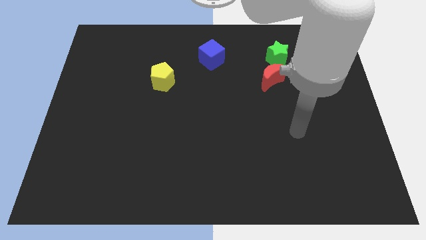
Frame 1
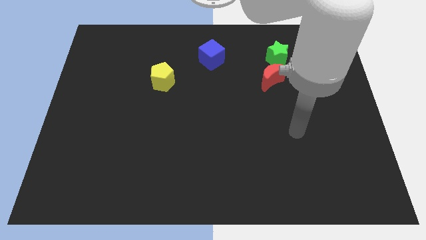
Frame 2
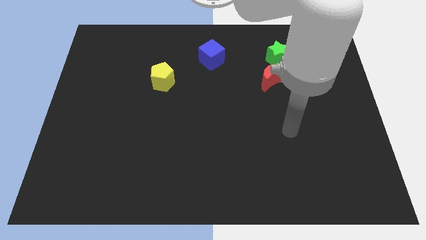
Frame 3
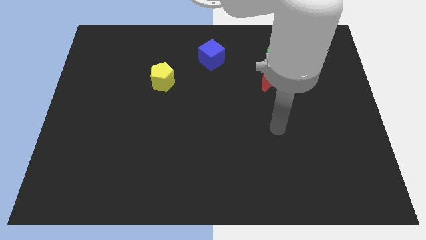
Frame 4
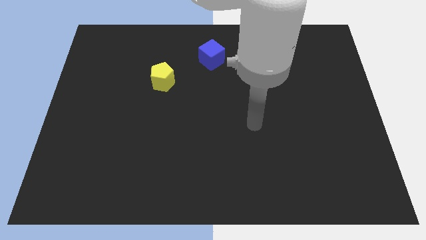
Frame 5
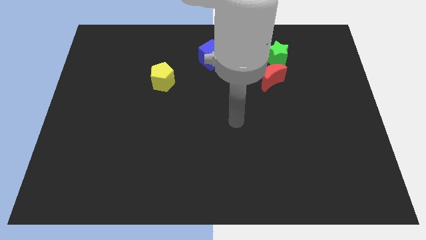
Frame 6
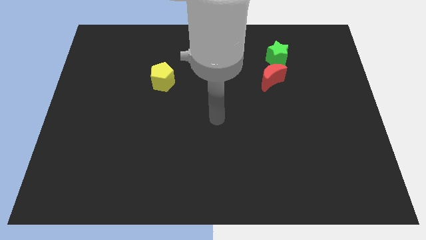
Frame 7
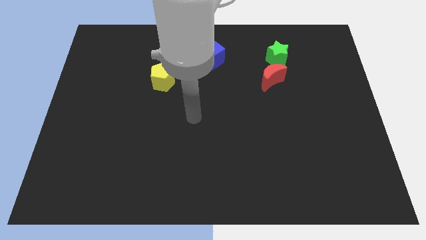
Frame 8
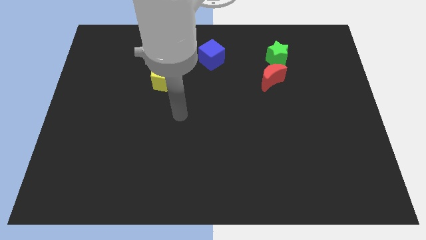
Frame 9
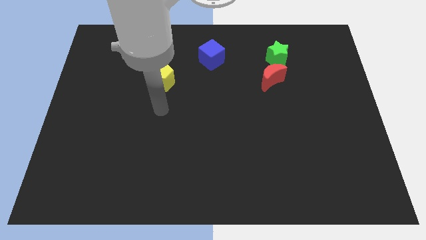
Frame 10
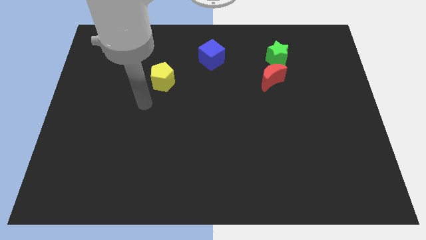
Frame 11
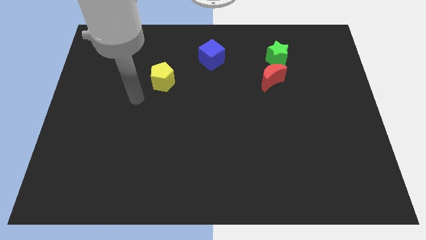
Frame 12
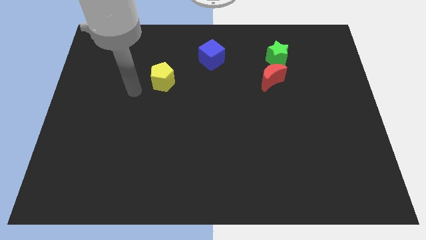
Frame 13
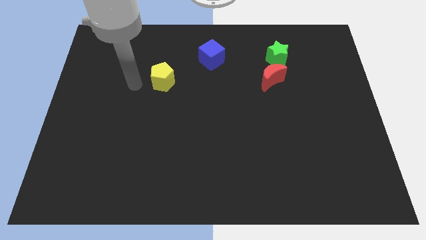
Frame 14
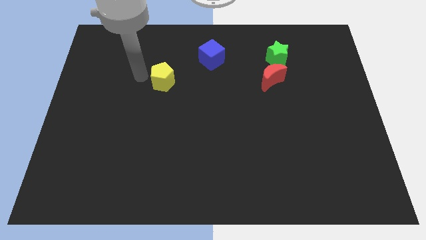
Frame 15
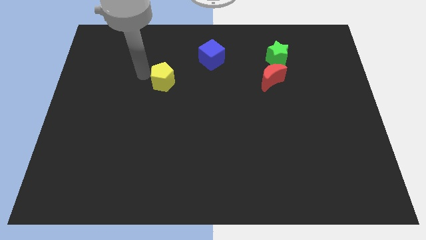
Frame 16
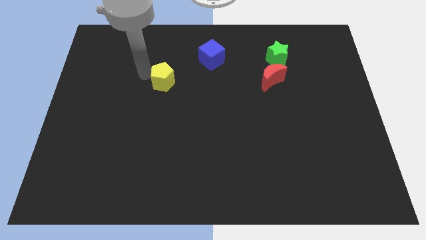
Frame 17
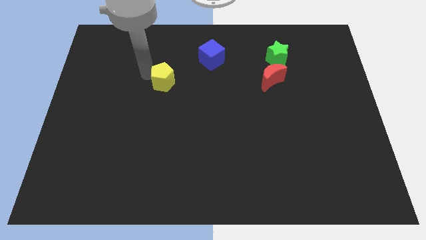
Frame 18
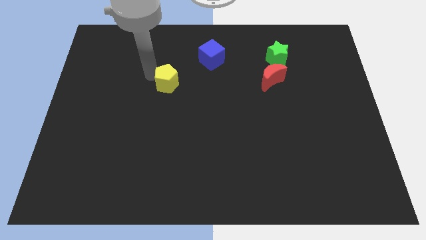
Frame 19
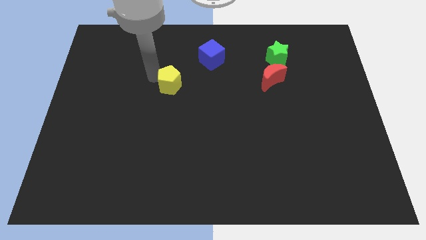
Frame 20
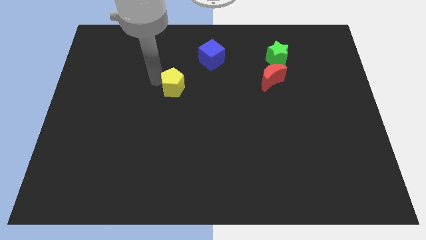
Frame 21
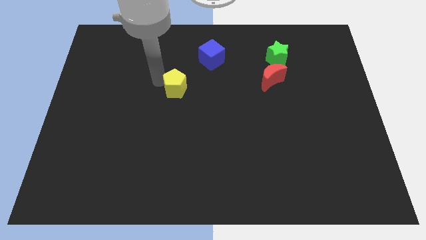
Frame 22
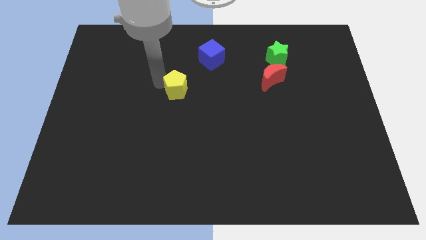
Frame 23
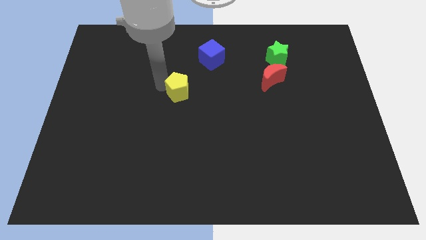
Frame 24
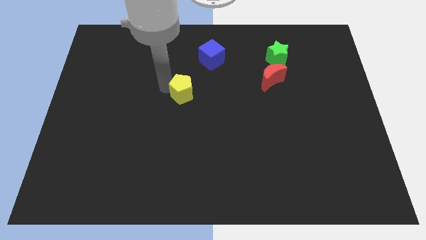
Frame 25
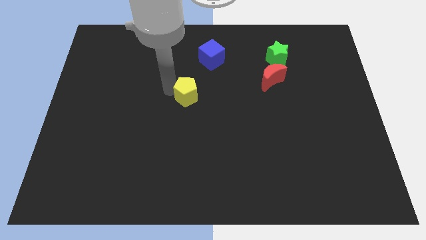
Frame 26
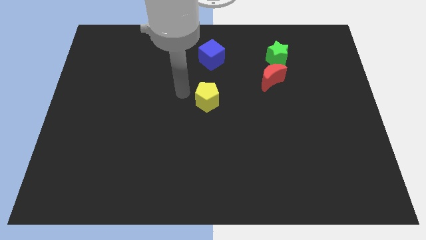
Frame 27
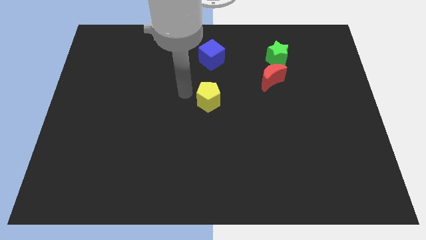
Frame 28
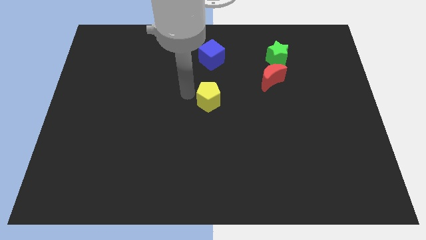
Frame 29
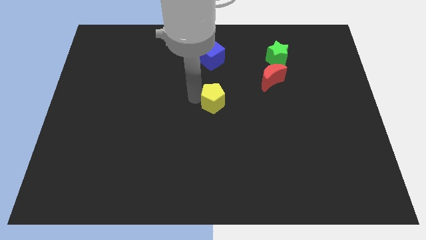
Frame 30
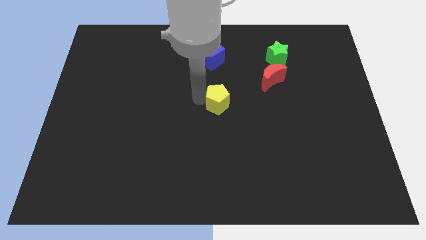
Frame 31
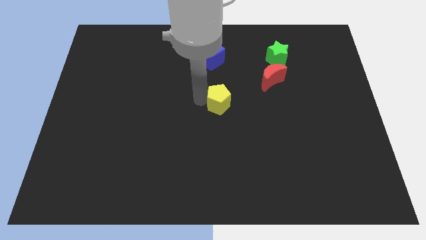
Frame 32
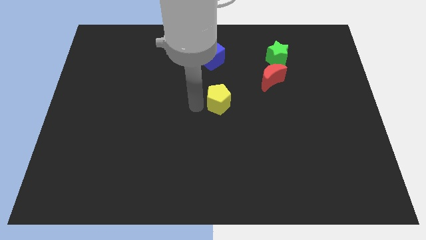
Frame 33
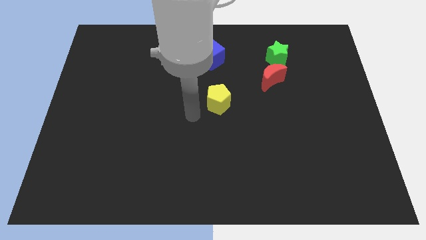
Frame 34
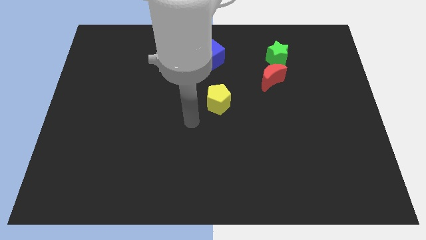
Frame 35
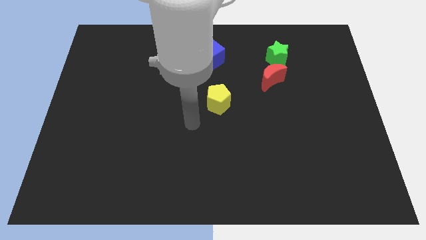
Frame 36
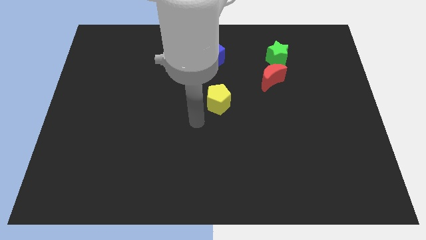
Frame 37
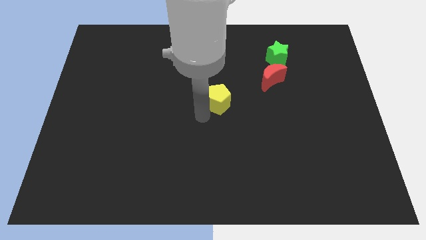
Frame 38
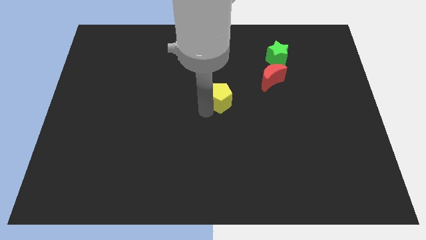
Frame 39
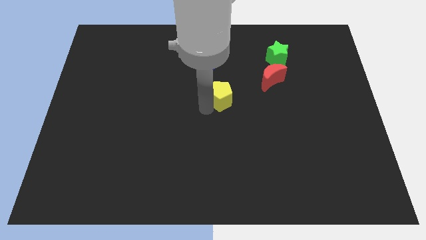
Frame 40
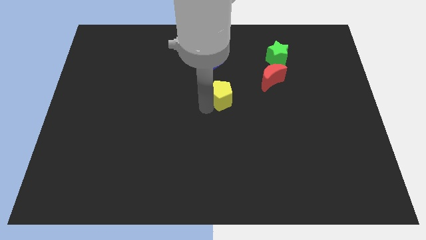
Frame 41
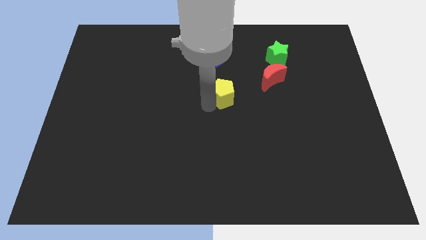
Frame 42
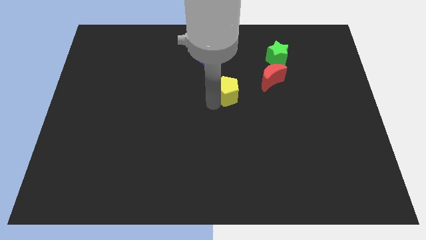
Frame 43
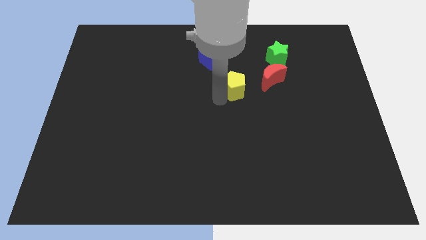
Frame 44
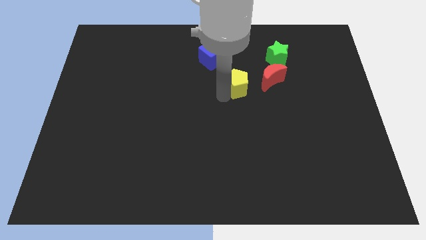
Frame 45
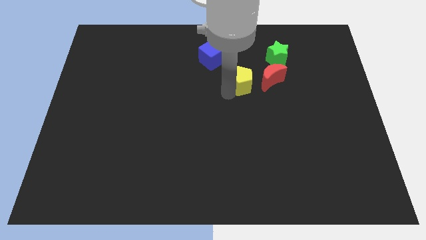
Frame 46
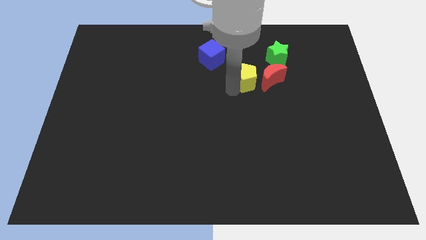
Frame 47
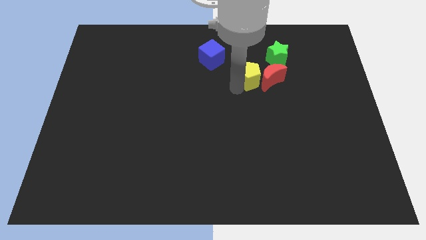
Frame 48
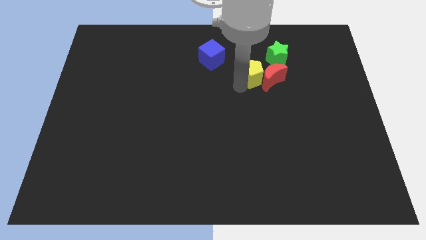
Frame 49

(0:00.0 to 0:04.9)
push the yellow pentagon to the red block

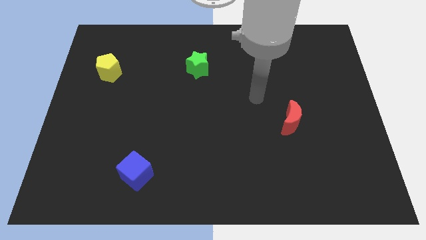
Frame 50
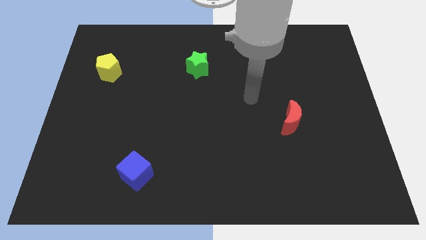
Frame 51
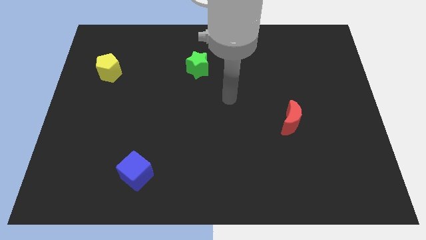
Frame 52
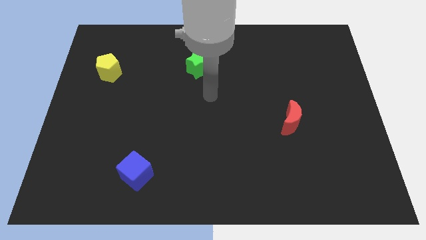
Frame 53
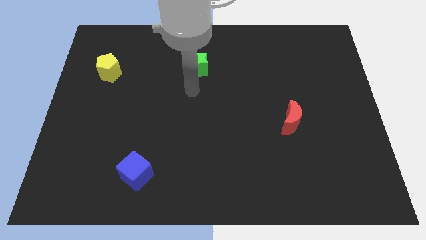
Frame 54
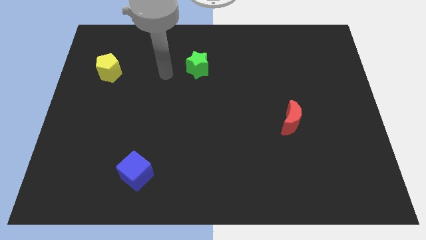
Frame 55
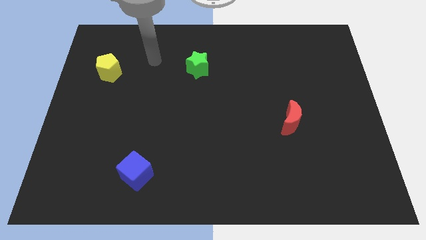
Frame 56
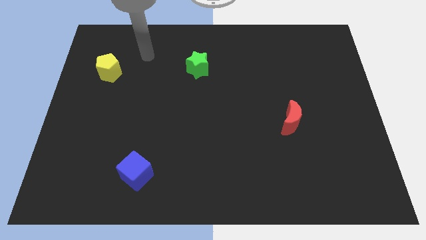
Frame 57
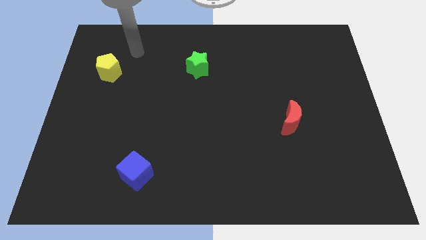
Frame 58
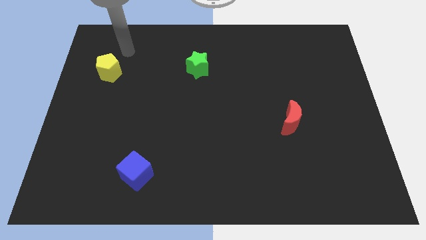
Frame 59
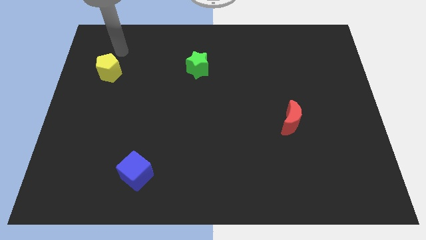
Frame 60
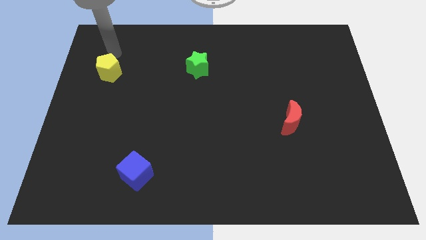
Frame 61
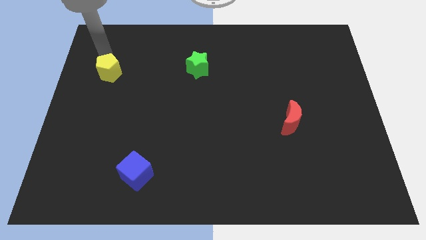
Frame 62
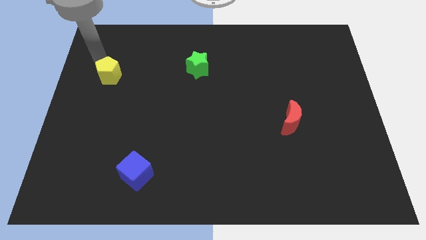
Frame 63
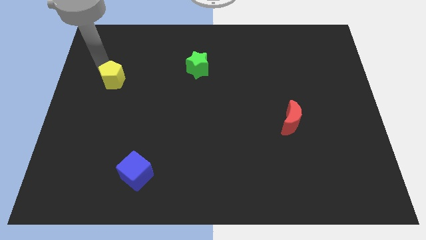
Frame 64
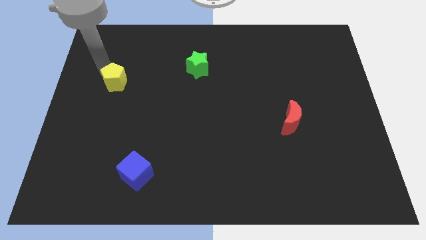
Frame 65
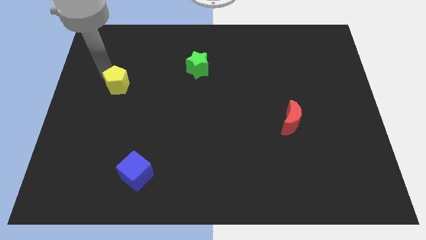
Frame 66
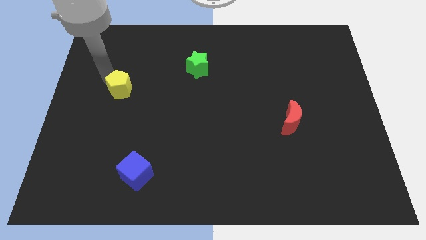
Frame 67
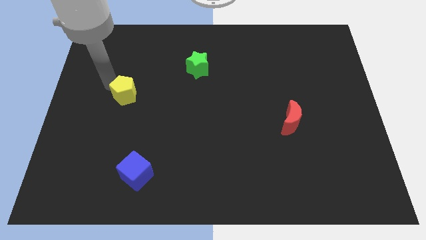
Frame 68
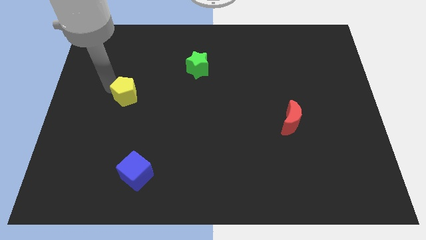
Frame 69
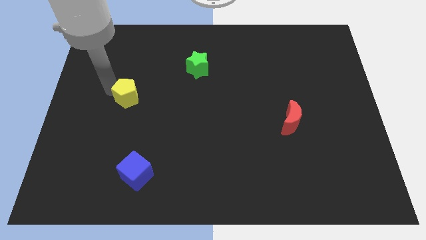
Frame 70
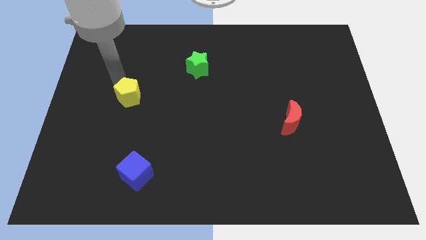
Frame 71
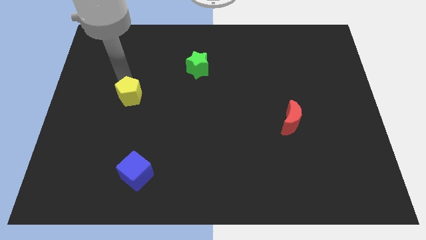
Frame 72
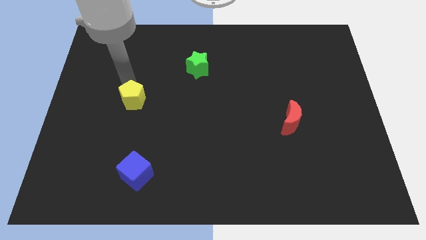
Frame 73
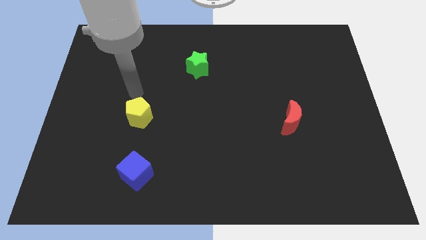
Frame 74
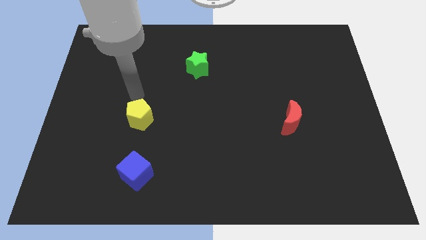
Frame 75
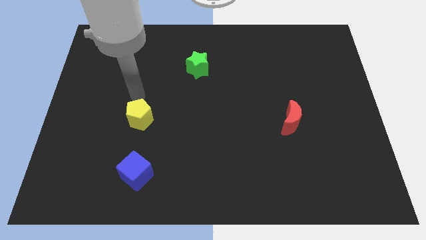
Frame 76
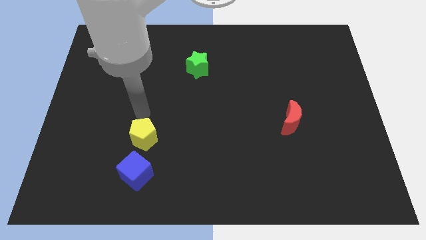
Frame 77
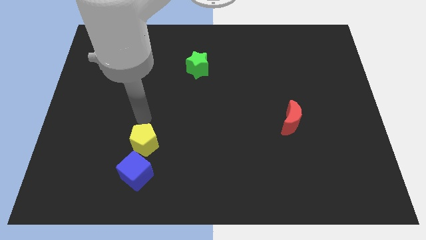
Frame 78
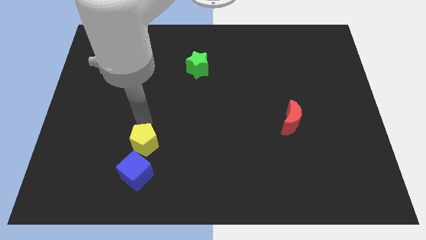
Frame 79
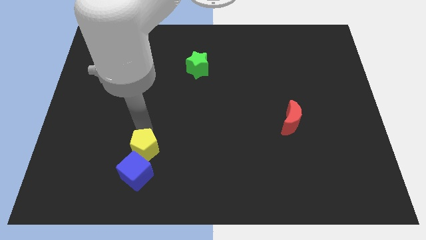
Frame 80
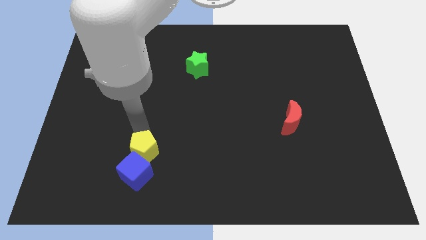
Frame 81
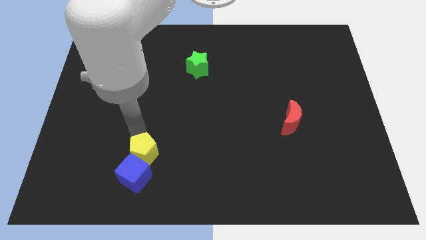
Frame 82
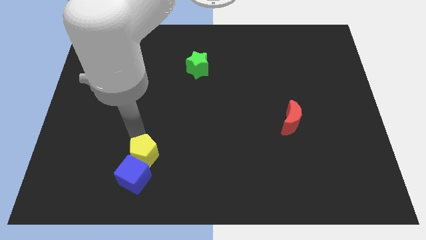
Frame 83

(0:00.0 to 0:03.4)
push the yellow pentagon close to the cube

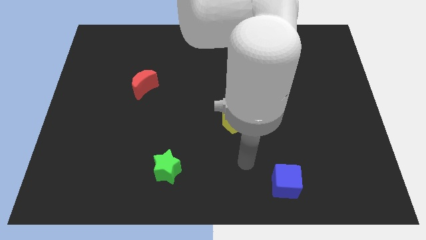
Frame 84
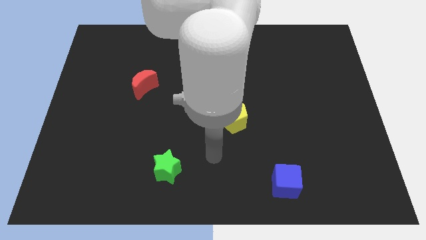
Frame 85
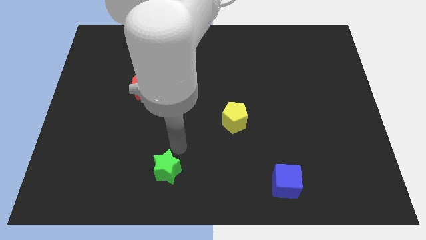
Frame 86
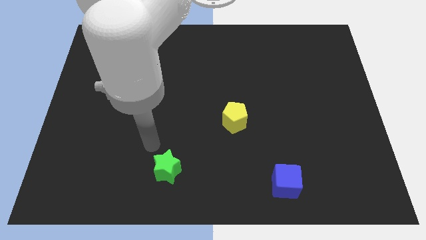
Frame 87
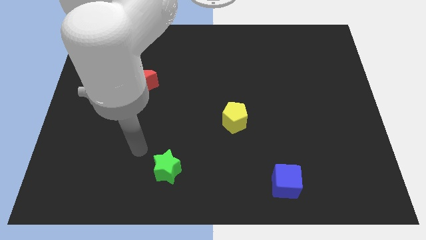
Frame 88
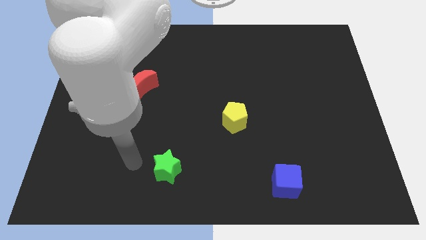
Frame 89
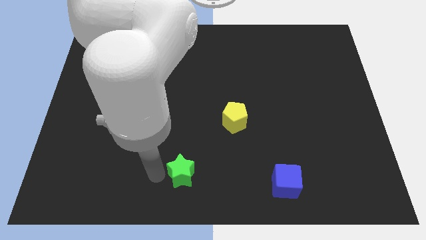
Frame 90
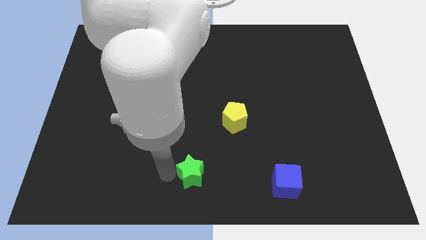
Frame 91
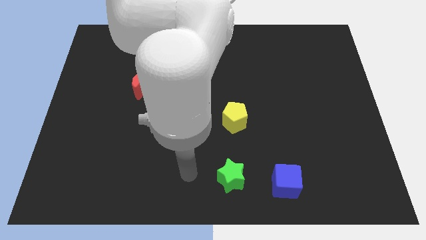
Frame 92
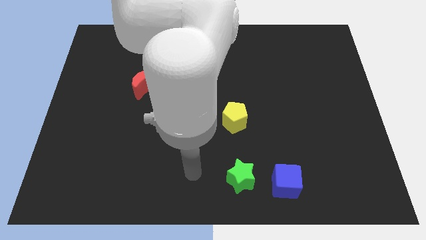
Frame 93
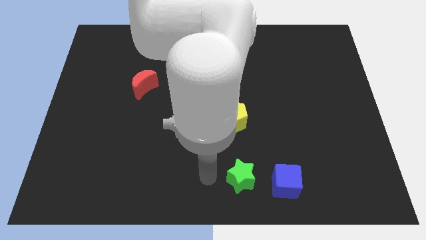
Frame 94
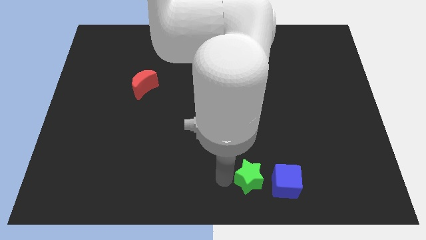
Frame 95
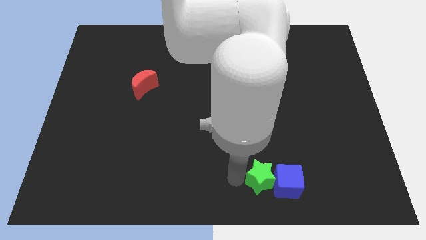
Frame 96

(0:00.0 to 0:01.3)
slide the green star to the cube
